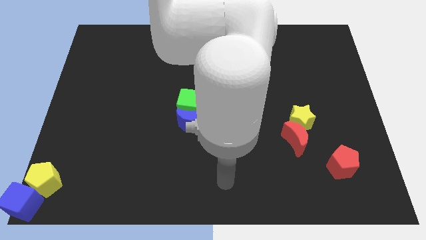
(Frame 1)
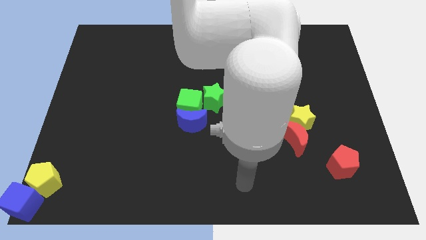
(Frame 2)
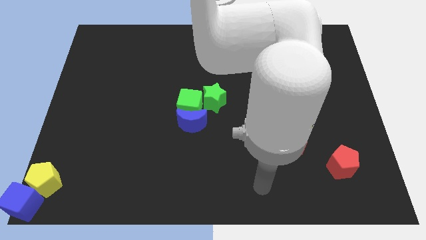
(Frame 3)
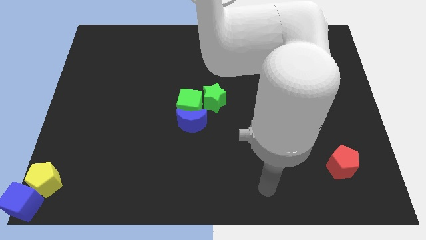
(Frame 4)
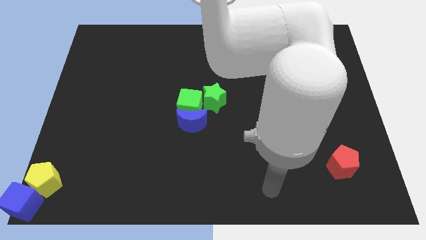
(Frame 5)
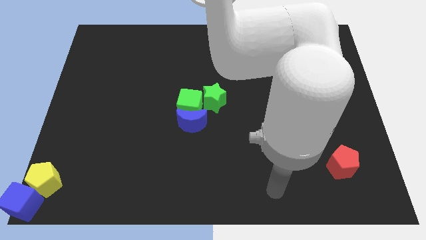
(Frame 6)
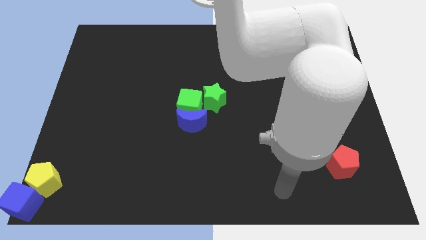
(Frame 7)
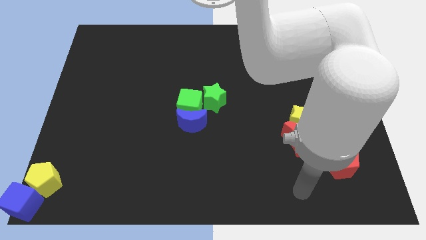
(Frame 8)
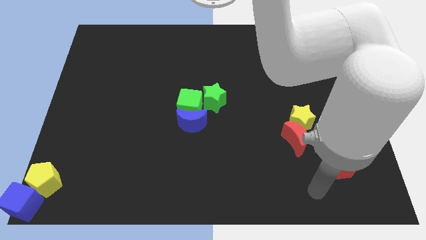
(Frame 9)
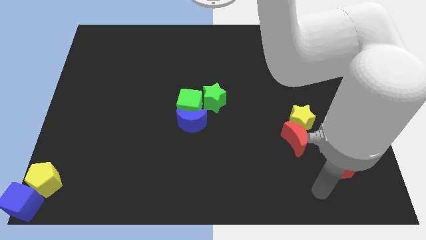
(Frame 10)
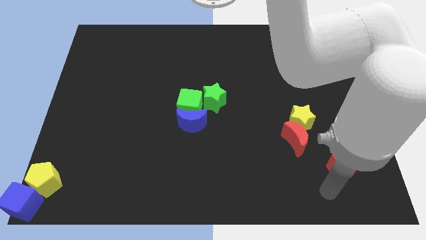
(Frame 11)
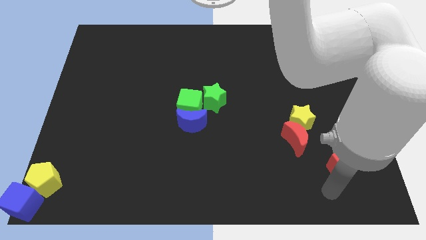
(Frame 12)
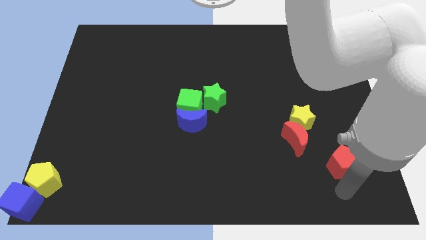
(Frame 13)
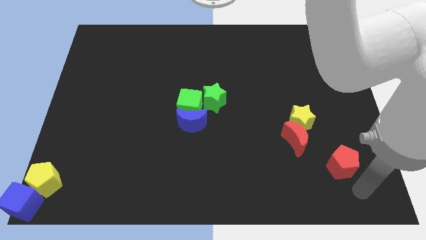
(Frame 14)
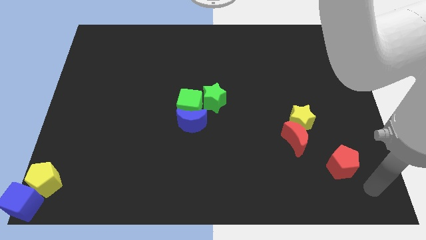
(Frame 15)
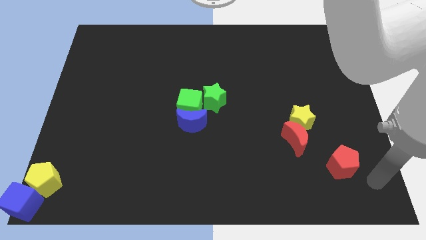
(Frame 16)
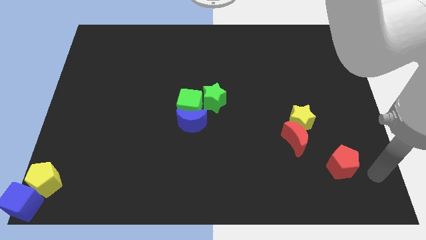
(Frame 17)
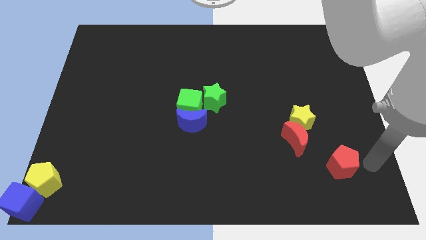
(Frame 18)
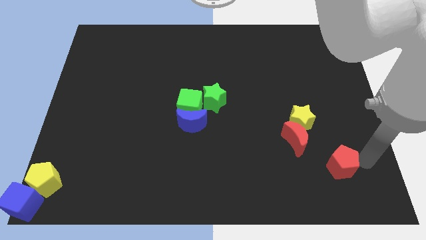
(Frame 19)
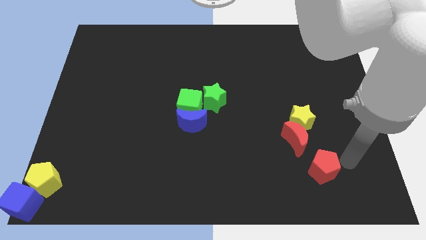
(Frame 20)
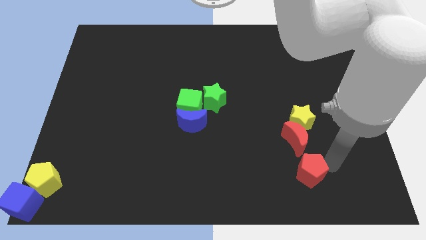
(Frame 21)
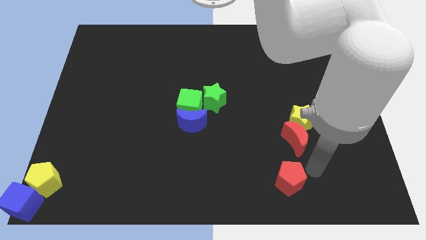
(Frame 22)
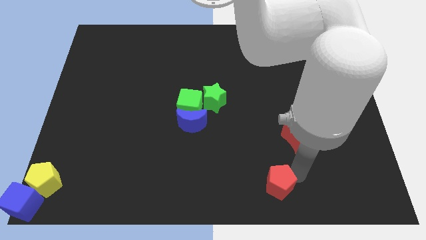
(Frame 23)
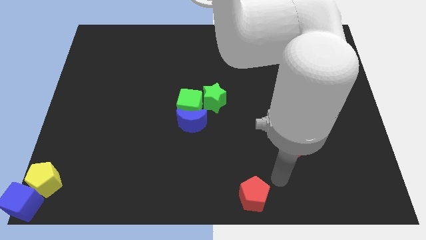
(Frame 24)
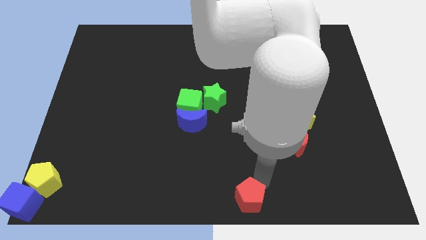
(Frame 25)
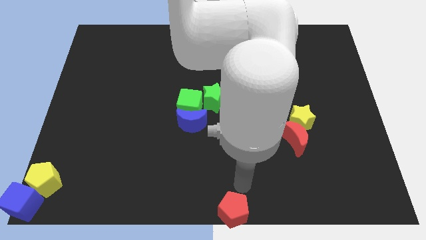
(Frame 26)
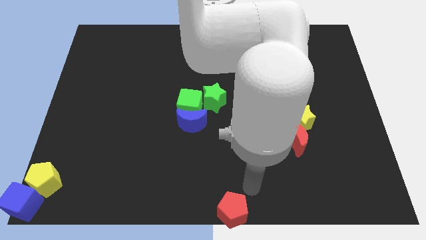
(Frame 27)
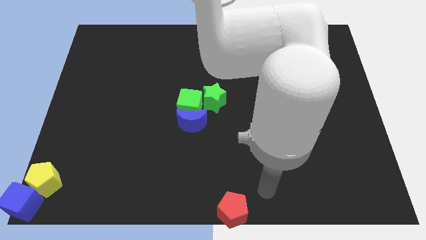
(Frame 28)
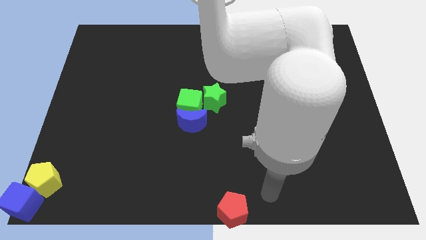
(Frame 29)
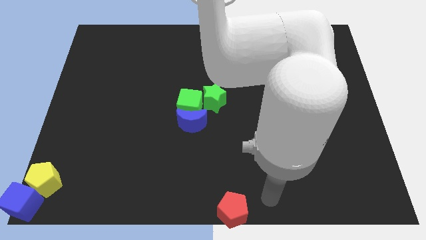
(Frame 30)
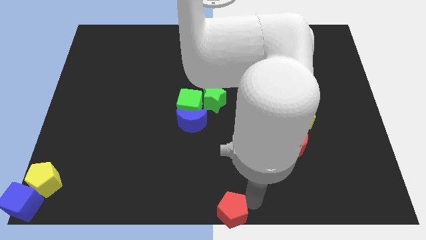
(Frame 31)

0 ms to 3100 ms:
place red pentagon at the bottom center

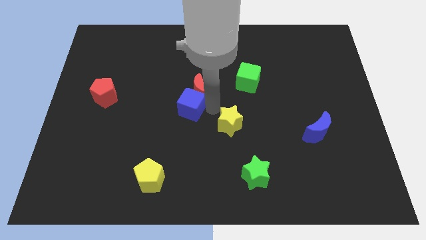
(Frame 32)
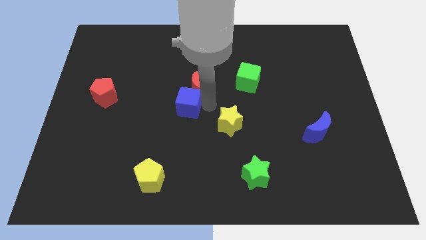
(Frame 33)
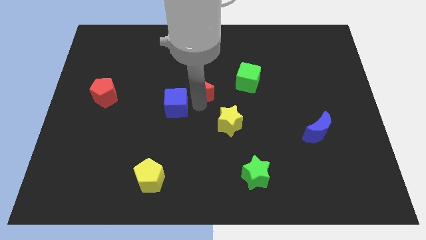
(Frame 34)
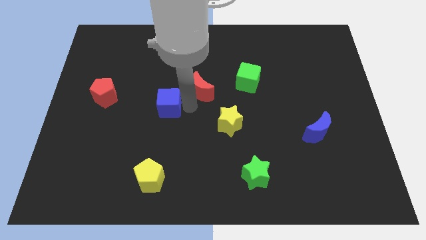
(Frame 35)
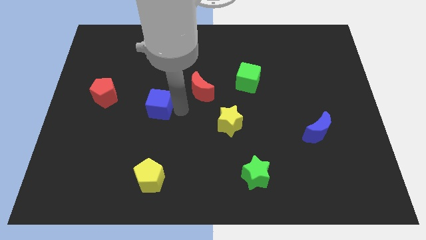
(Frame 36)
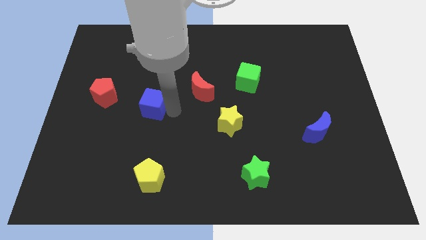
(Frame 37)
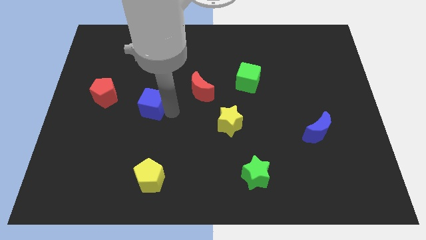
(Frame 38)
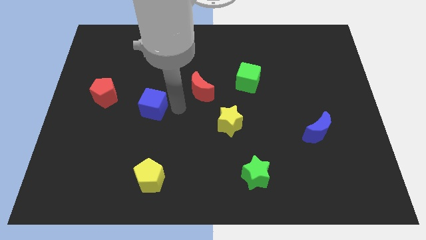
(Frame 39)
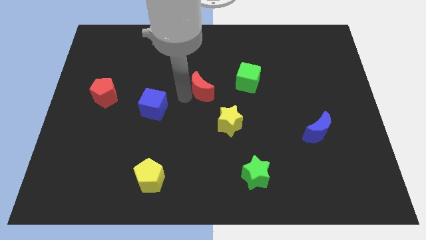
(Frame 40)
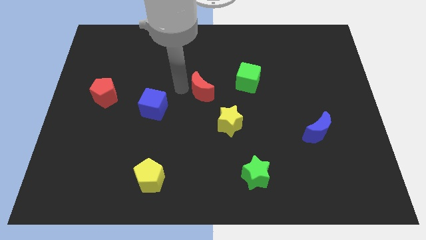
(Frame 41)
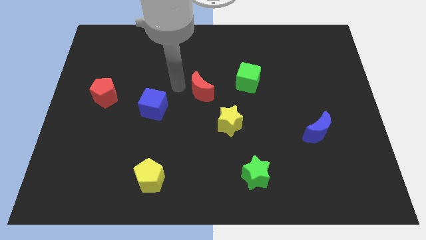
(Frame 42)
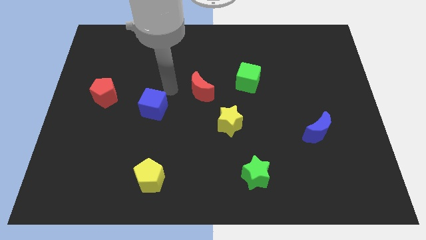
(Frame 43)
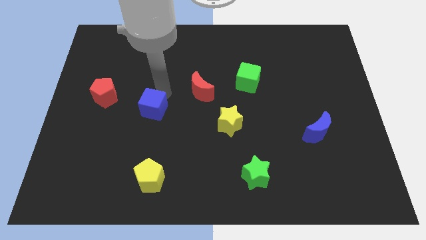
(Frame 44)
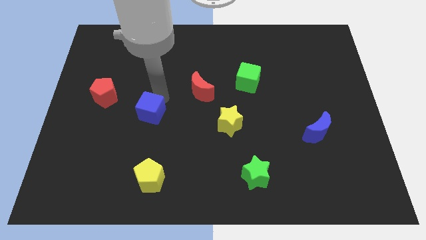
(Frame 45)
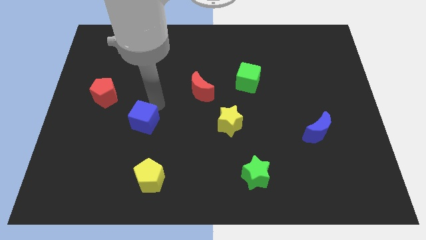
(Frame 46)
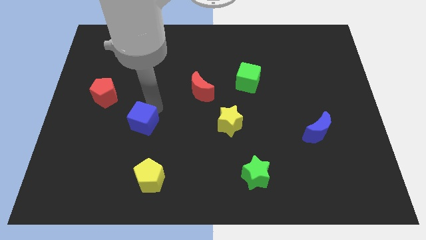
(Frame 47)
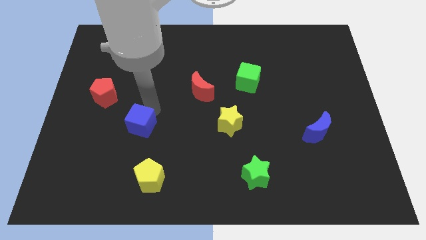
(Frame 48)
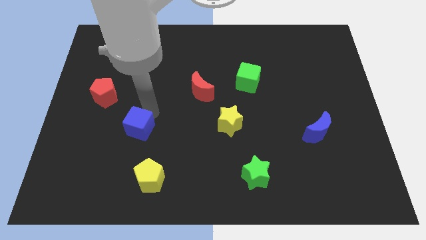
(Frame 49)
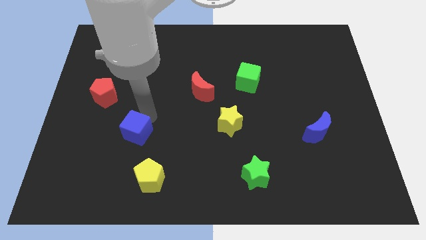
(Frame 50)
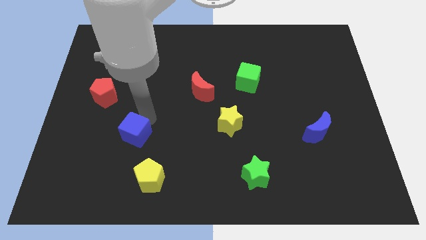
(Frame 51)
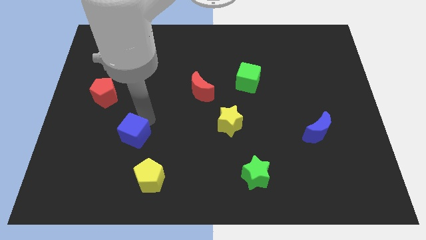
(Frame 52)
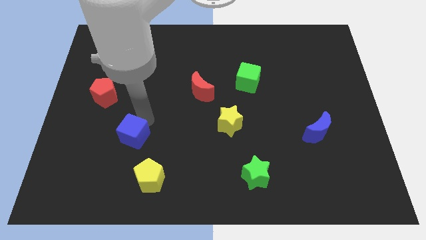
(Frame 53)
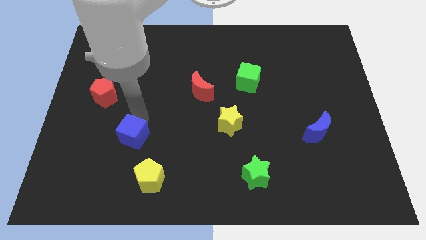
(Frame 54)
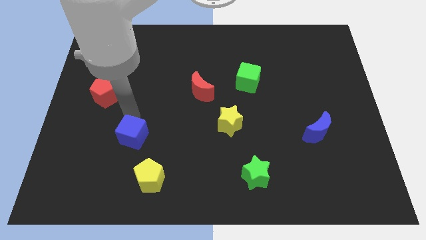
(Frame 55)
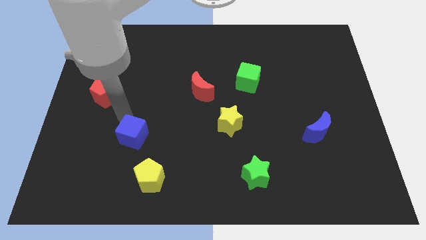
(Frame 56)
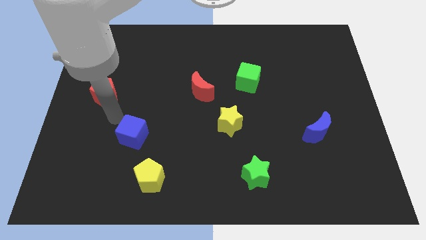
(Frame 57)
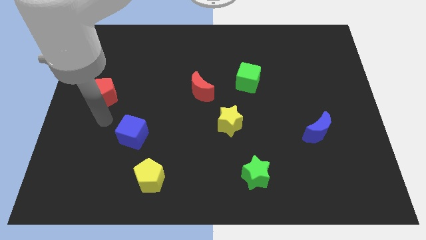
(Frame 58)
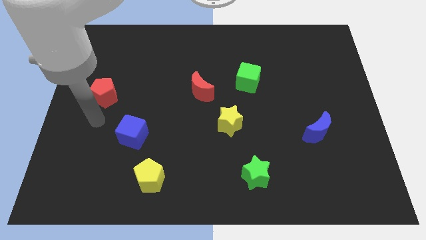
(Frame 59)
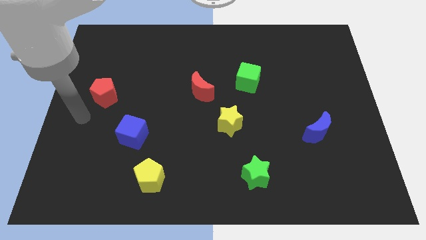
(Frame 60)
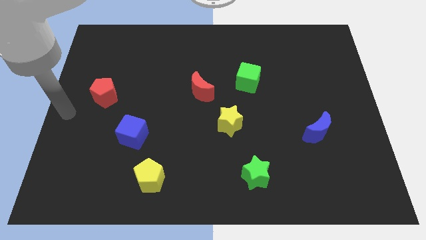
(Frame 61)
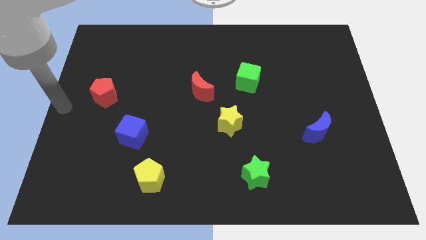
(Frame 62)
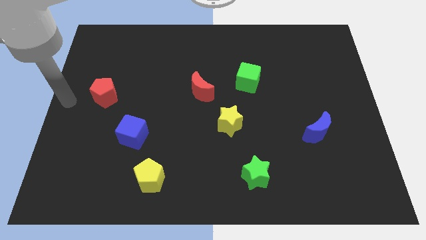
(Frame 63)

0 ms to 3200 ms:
place the blue cube parallel to the top left to the yellow pentagon

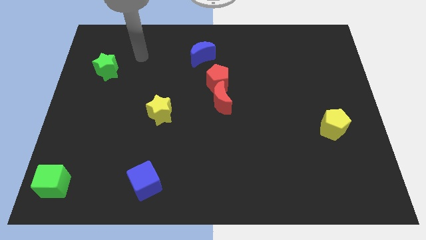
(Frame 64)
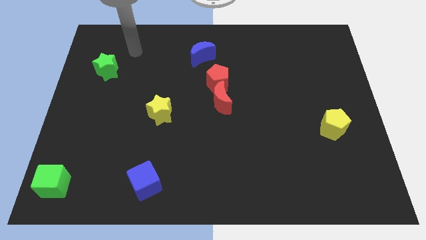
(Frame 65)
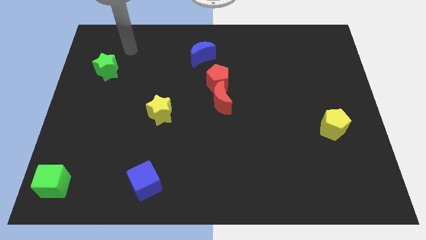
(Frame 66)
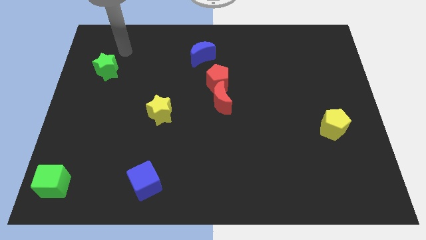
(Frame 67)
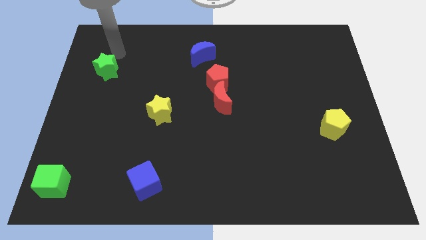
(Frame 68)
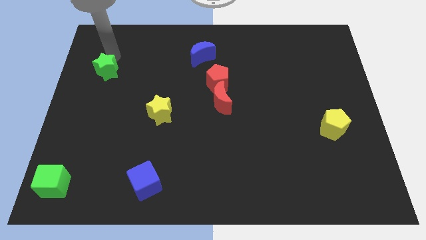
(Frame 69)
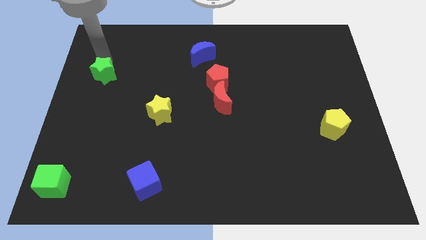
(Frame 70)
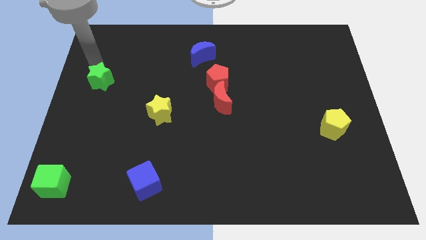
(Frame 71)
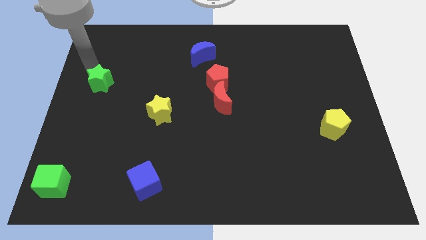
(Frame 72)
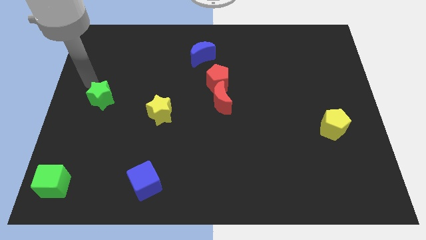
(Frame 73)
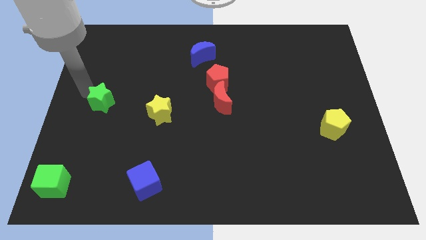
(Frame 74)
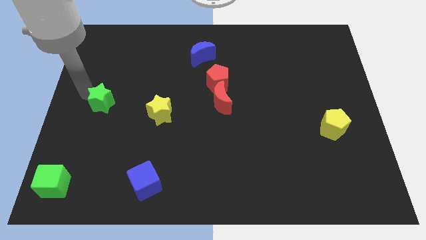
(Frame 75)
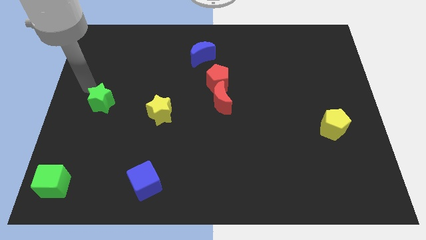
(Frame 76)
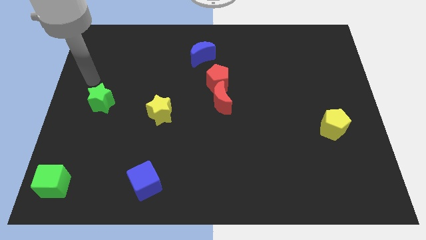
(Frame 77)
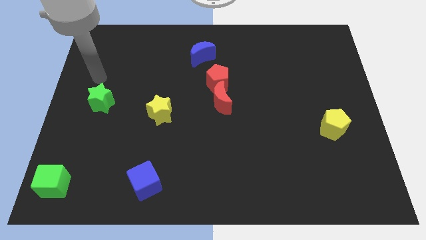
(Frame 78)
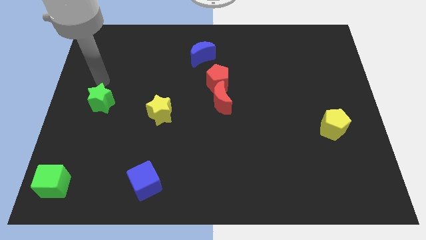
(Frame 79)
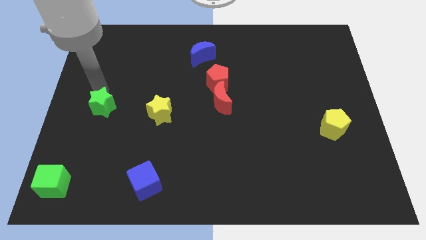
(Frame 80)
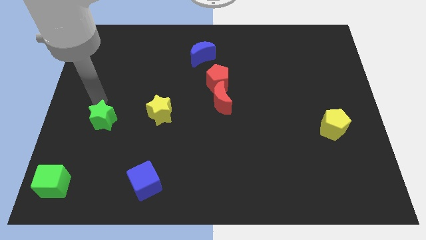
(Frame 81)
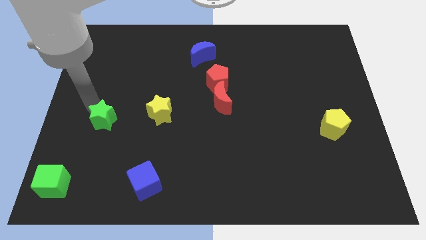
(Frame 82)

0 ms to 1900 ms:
move the green star left to the yellow star

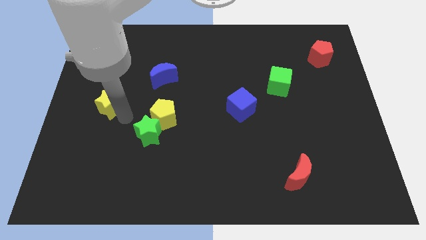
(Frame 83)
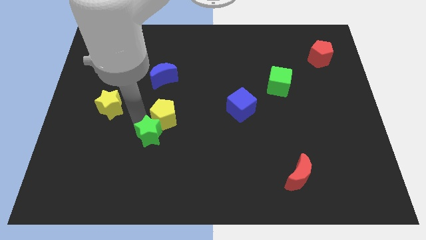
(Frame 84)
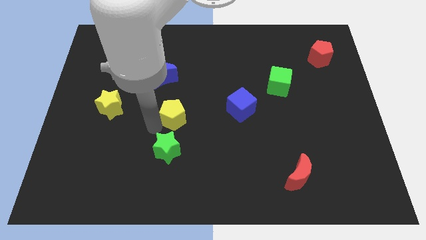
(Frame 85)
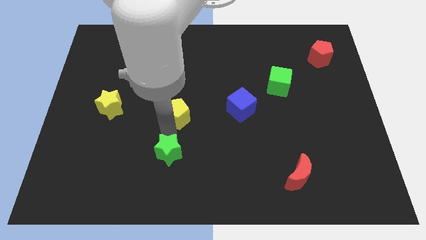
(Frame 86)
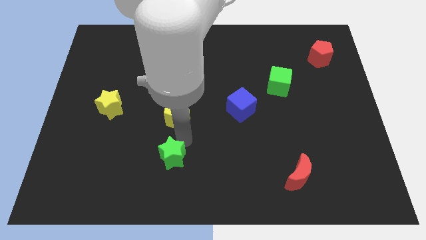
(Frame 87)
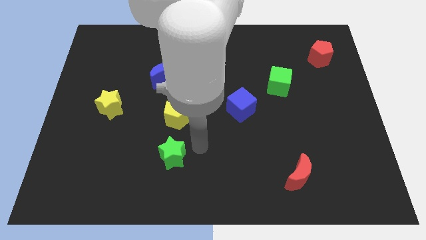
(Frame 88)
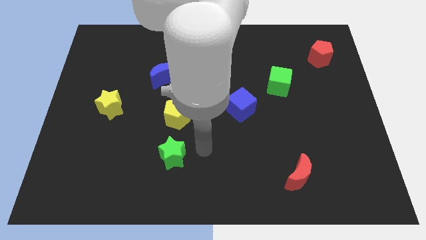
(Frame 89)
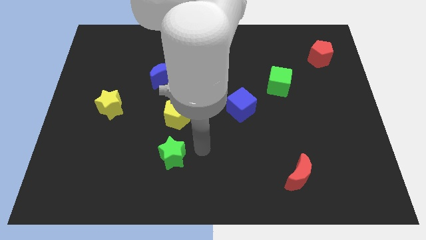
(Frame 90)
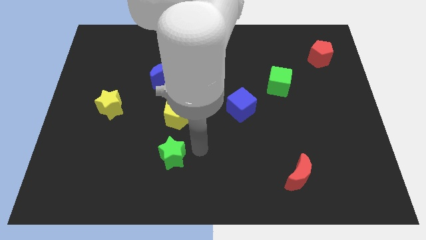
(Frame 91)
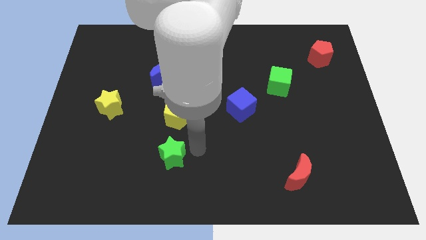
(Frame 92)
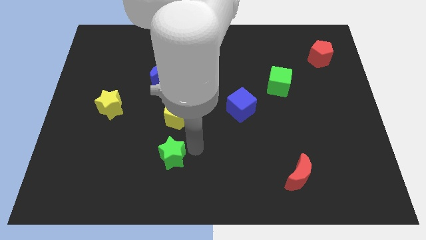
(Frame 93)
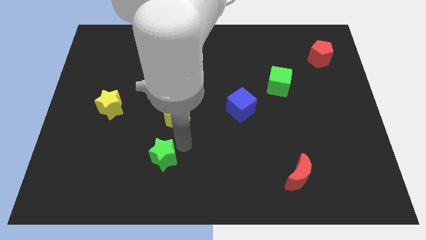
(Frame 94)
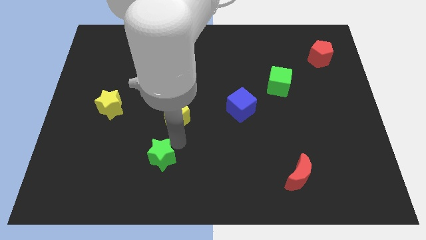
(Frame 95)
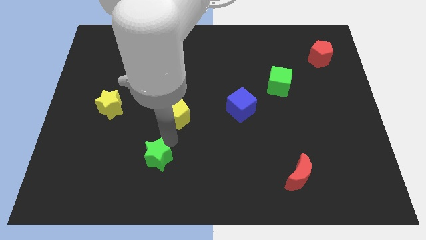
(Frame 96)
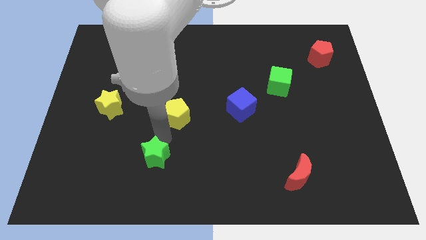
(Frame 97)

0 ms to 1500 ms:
separate the green star from the yellow pentagon
